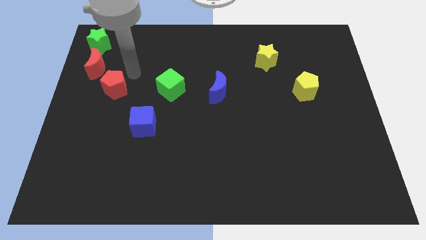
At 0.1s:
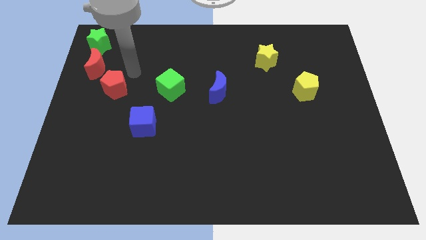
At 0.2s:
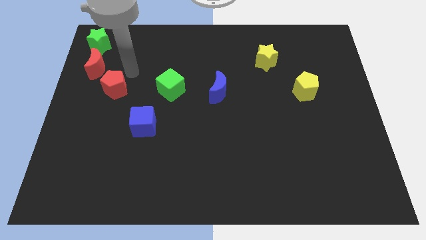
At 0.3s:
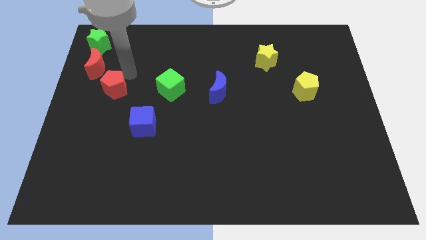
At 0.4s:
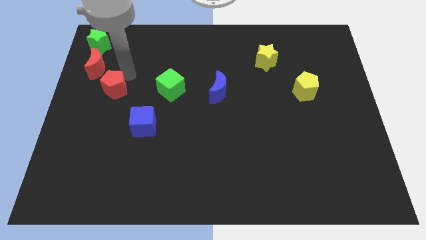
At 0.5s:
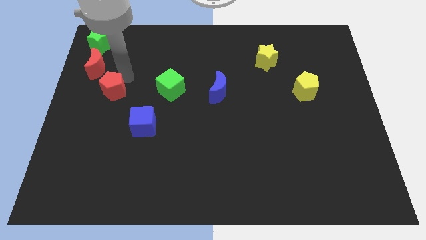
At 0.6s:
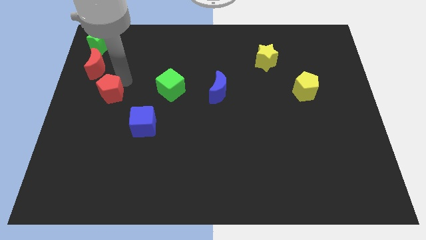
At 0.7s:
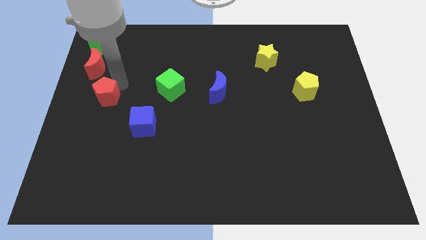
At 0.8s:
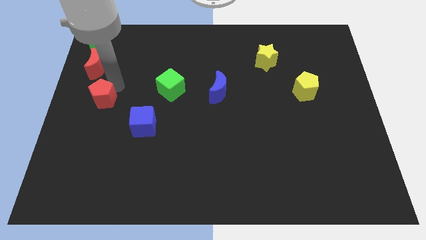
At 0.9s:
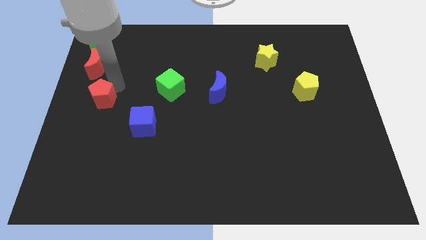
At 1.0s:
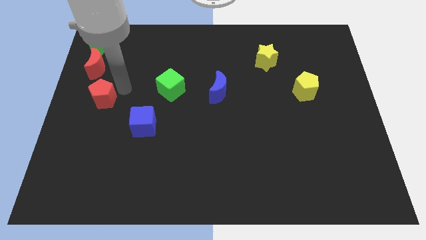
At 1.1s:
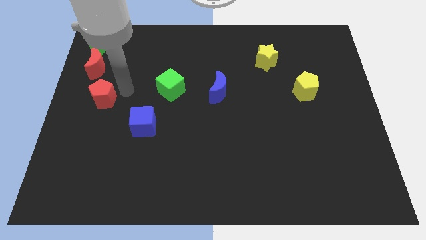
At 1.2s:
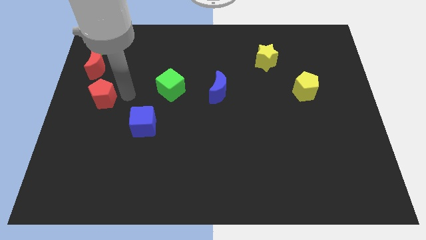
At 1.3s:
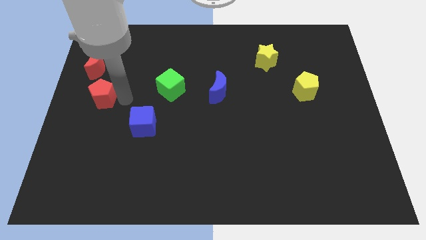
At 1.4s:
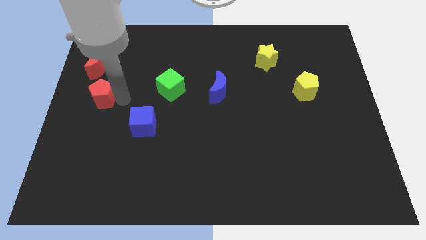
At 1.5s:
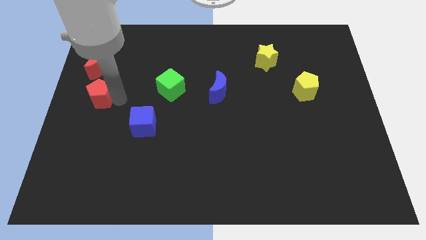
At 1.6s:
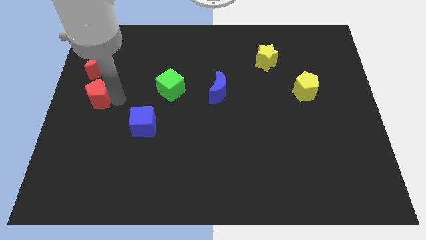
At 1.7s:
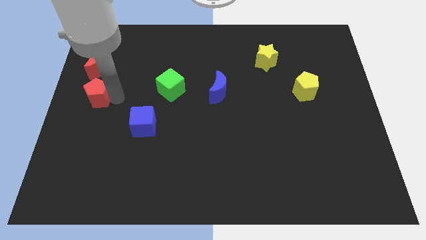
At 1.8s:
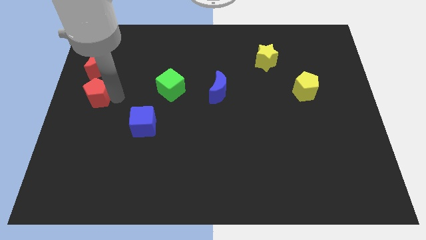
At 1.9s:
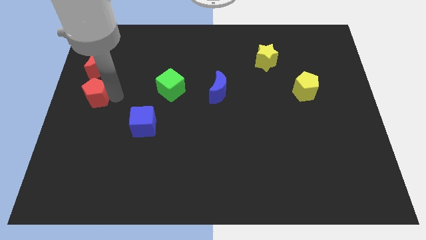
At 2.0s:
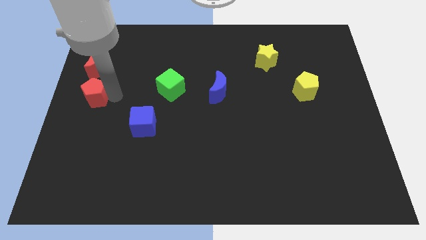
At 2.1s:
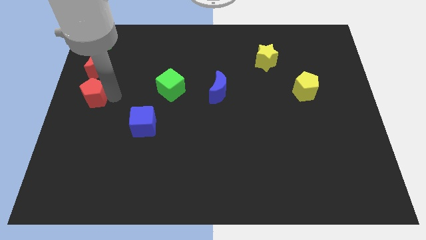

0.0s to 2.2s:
push the red pentagon below the red moon

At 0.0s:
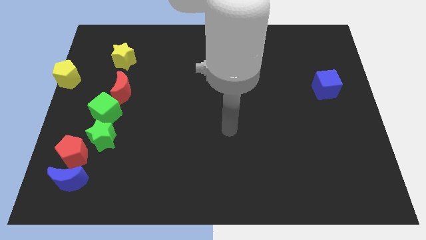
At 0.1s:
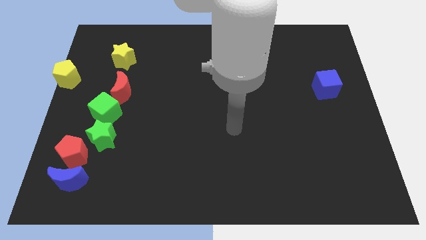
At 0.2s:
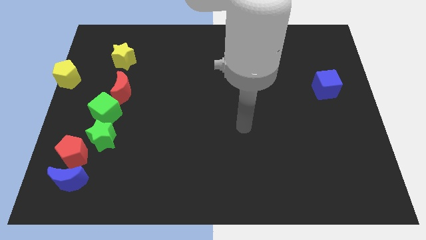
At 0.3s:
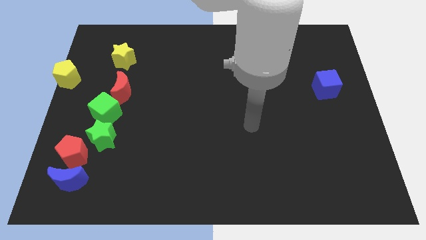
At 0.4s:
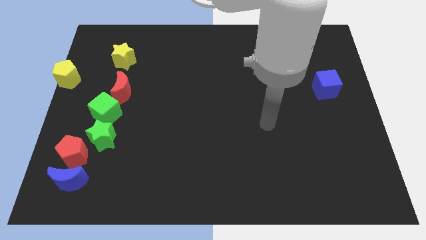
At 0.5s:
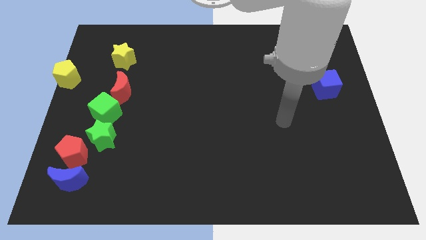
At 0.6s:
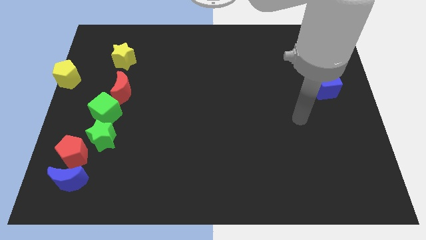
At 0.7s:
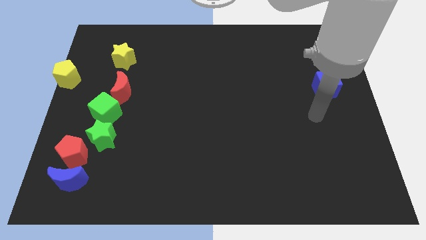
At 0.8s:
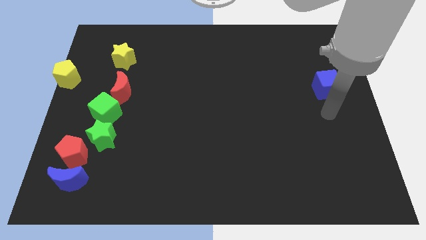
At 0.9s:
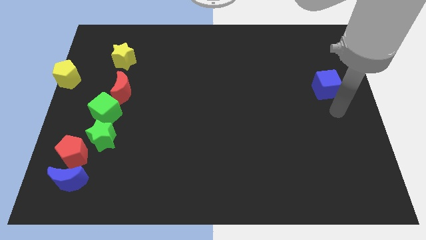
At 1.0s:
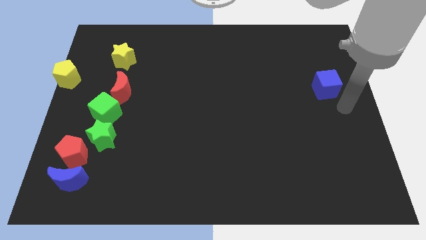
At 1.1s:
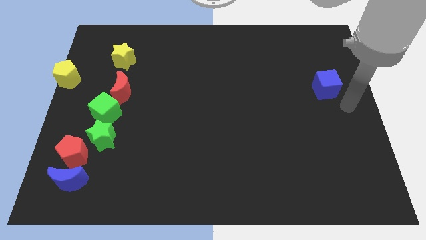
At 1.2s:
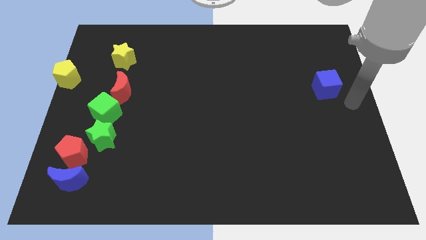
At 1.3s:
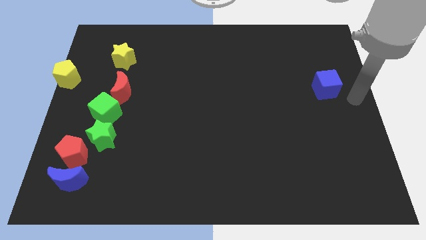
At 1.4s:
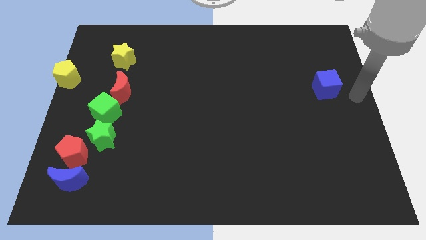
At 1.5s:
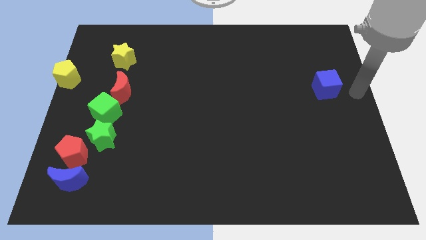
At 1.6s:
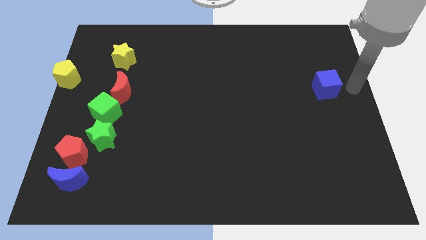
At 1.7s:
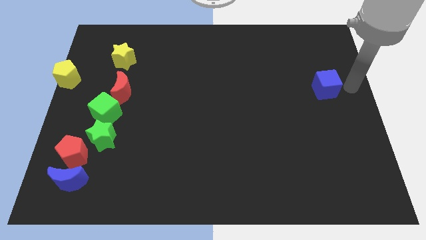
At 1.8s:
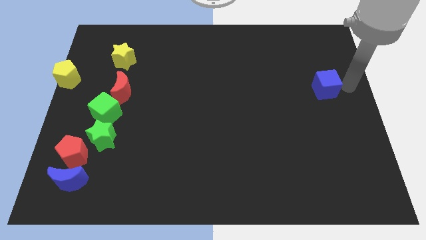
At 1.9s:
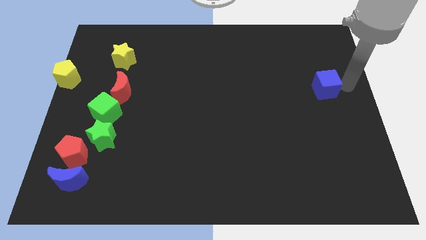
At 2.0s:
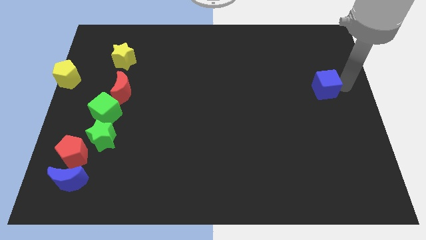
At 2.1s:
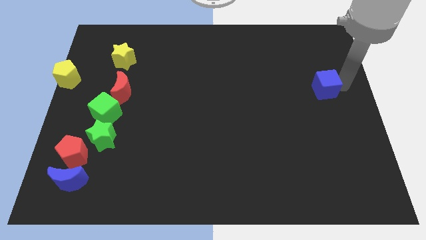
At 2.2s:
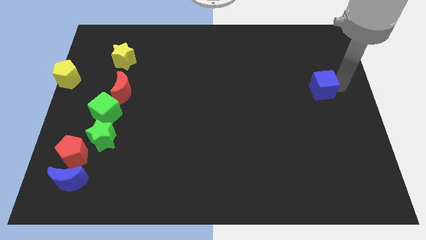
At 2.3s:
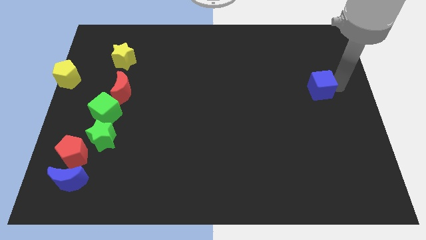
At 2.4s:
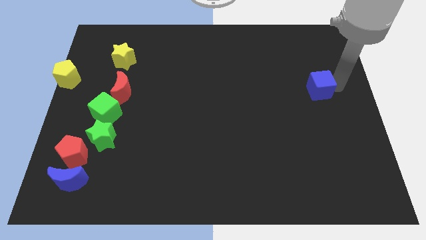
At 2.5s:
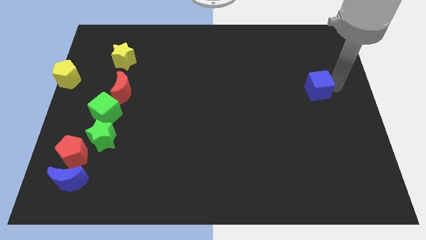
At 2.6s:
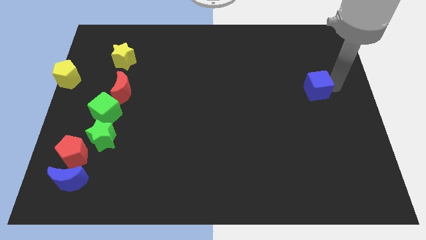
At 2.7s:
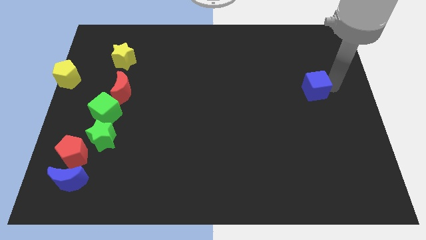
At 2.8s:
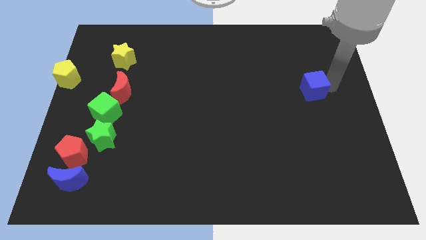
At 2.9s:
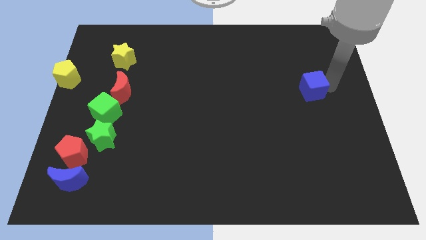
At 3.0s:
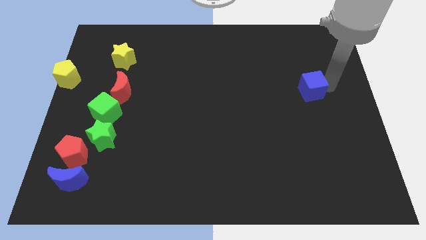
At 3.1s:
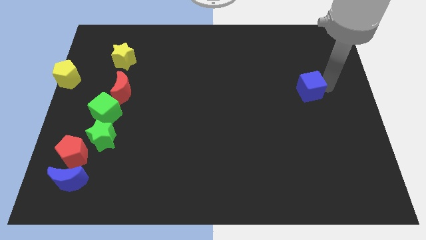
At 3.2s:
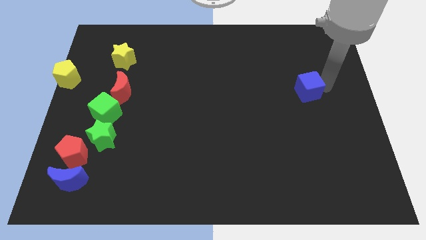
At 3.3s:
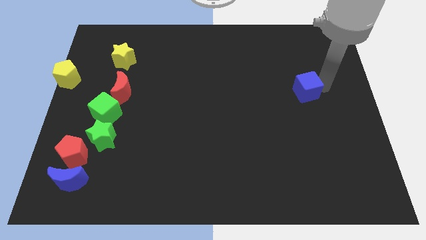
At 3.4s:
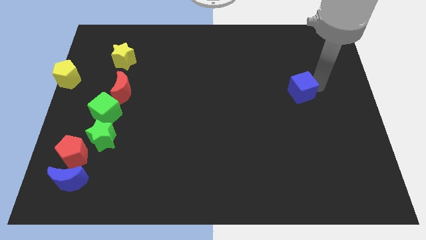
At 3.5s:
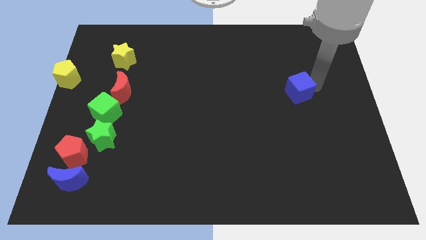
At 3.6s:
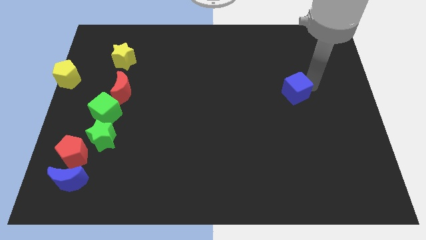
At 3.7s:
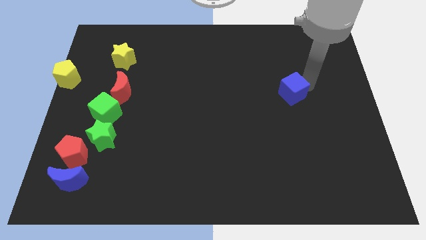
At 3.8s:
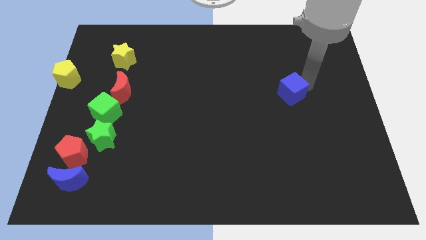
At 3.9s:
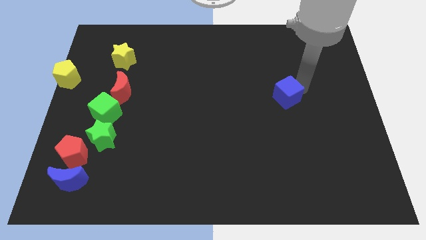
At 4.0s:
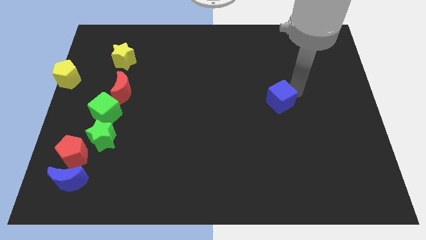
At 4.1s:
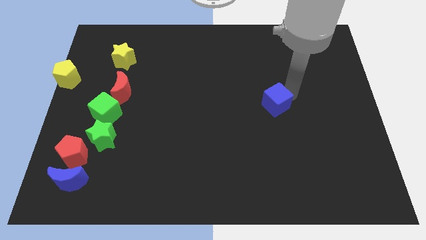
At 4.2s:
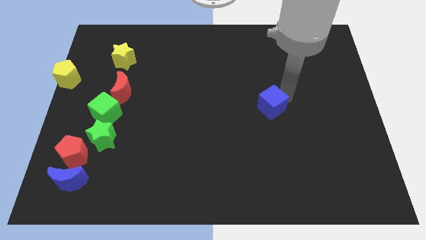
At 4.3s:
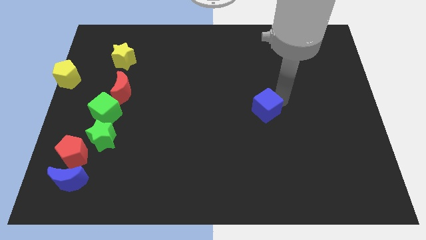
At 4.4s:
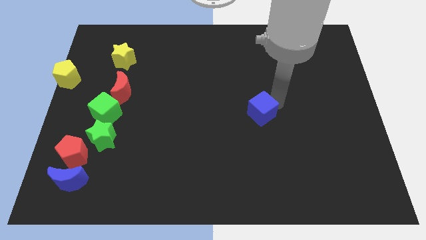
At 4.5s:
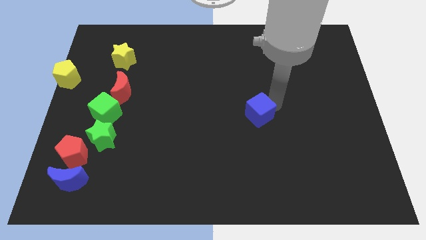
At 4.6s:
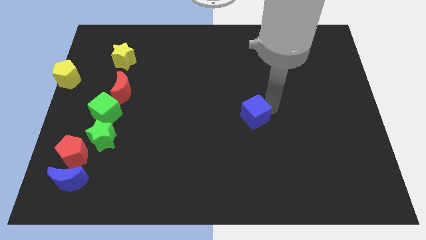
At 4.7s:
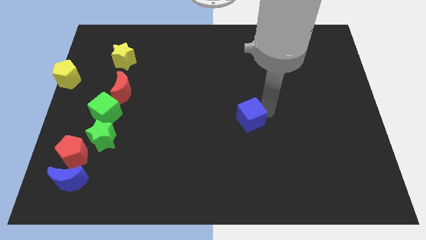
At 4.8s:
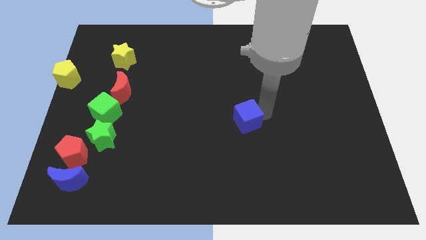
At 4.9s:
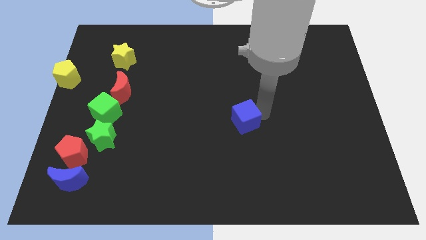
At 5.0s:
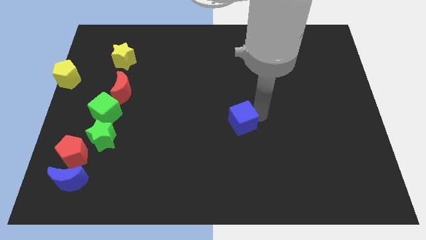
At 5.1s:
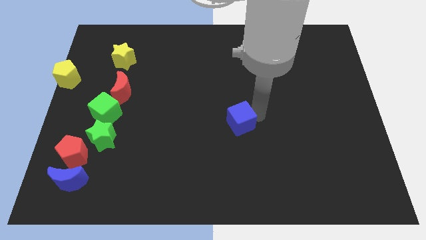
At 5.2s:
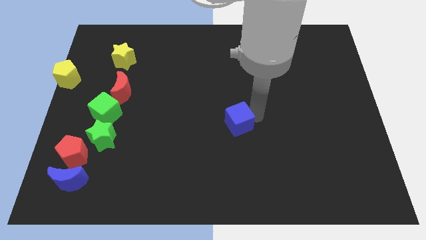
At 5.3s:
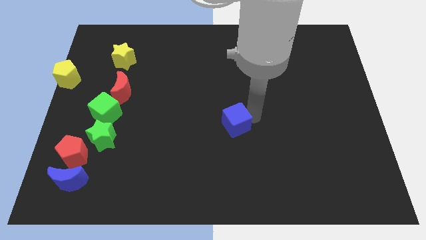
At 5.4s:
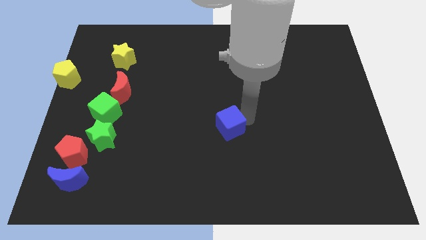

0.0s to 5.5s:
move the blue cube to the center of the board

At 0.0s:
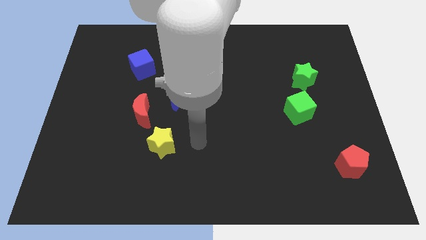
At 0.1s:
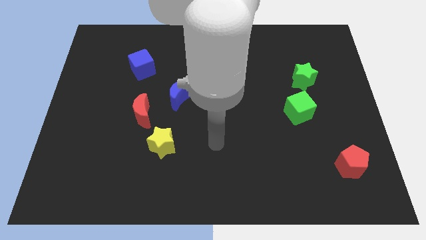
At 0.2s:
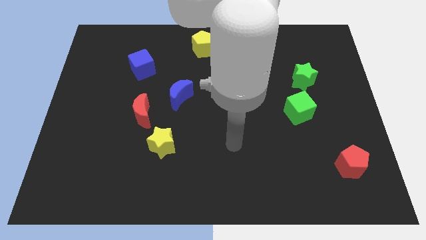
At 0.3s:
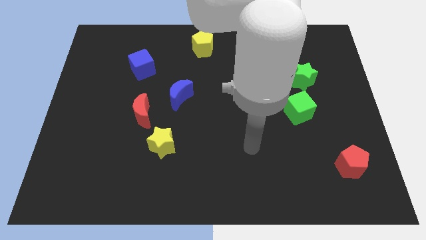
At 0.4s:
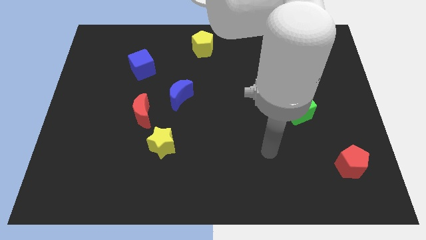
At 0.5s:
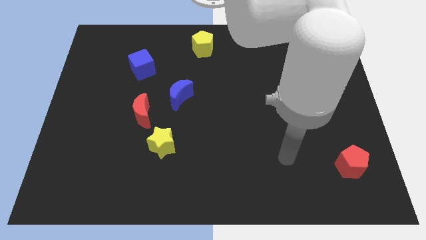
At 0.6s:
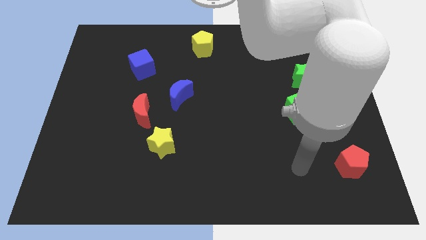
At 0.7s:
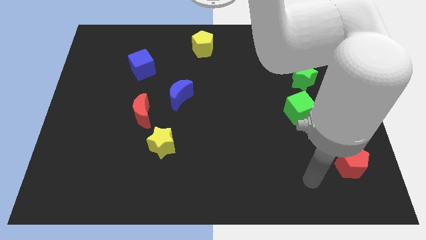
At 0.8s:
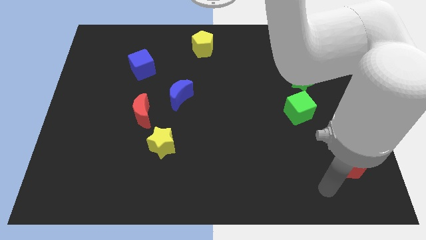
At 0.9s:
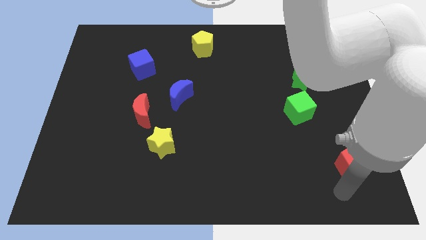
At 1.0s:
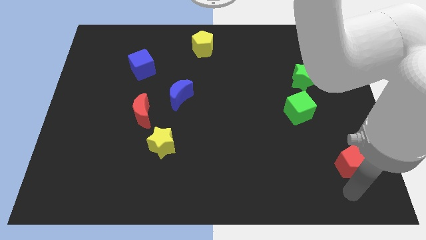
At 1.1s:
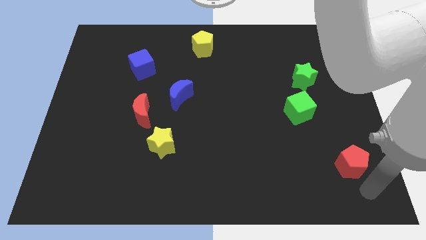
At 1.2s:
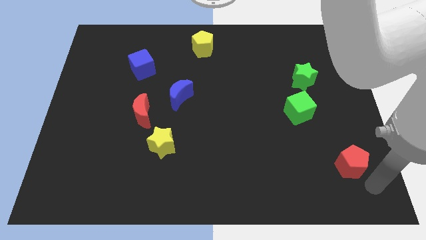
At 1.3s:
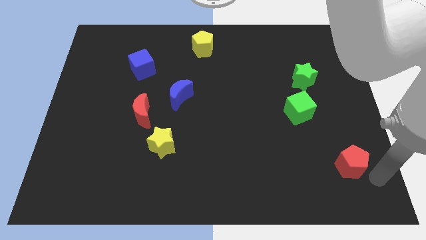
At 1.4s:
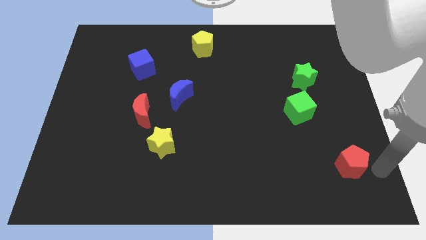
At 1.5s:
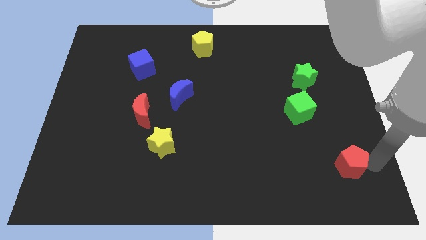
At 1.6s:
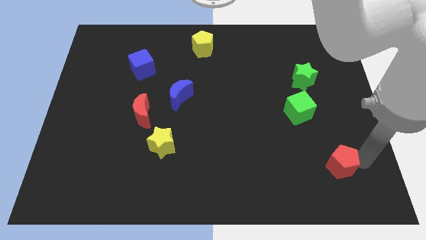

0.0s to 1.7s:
move your arm towards the red pentagon
